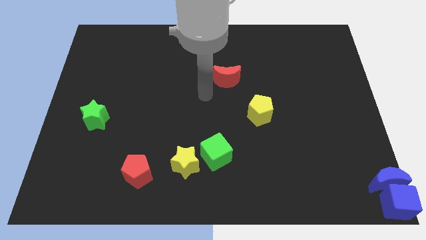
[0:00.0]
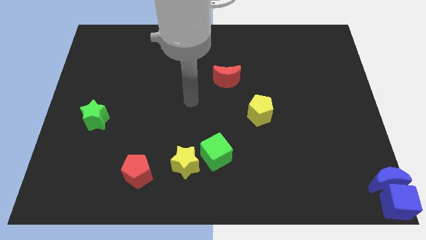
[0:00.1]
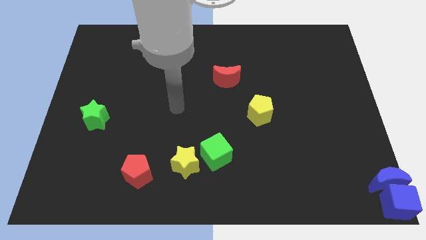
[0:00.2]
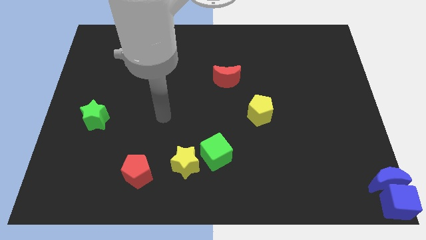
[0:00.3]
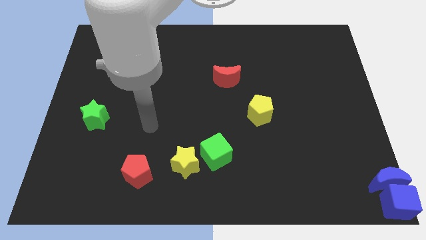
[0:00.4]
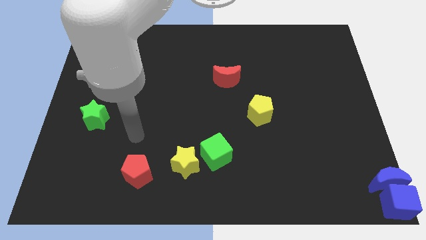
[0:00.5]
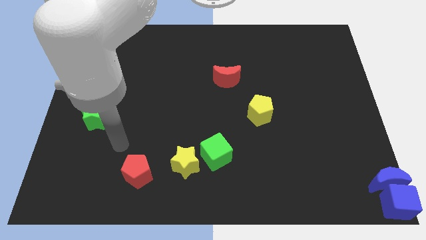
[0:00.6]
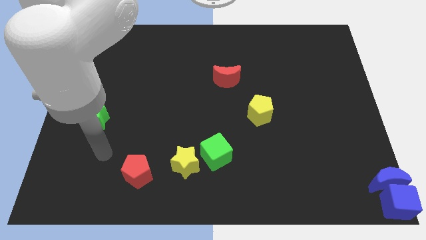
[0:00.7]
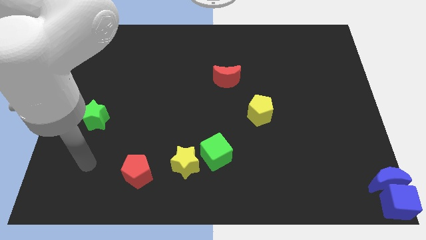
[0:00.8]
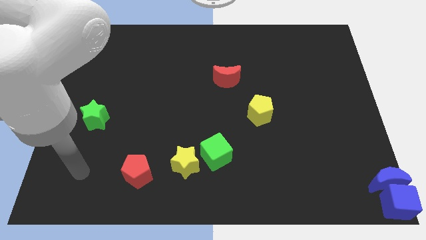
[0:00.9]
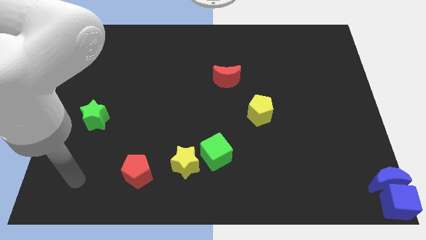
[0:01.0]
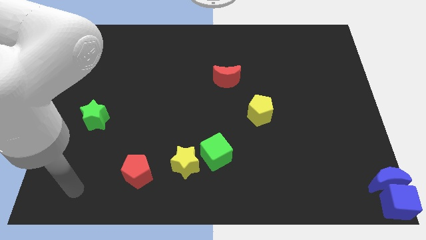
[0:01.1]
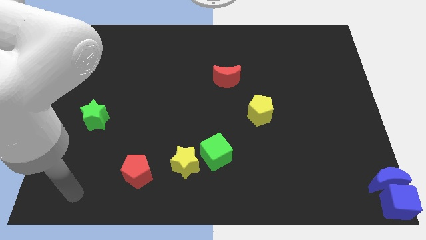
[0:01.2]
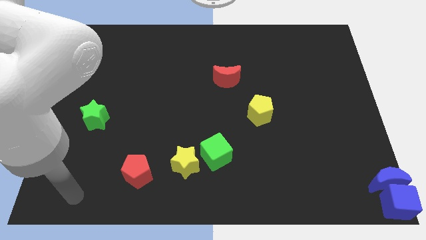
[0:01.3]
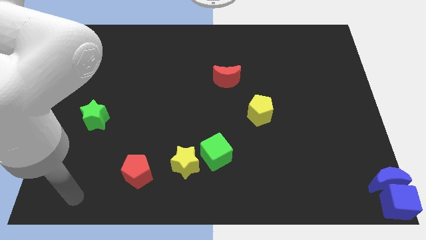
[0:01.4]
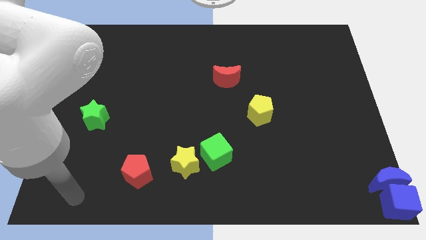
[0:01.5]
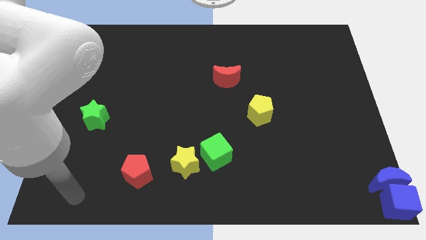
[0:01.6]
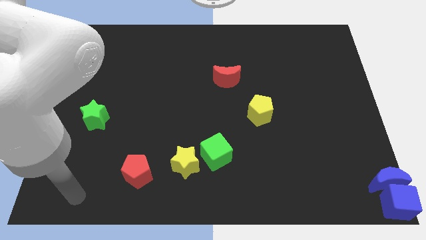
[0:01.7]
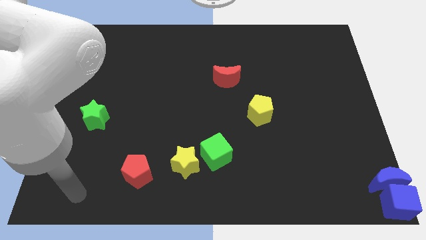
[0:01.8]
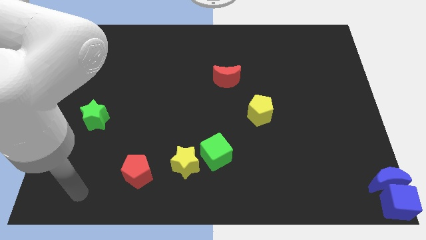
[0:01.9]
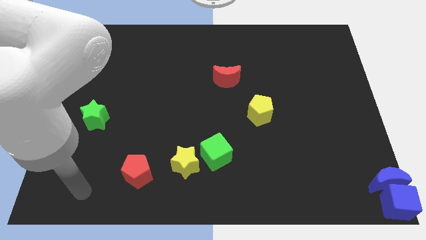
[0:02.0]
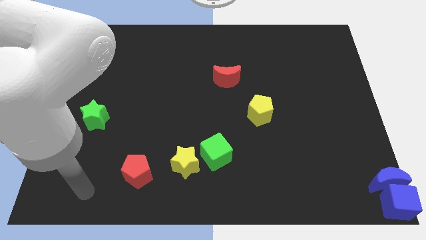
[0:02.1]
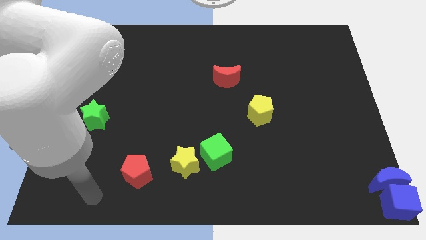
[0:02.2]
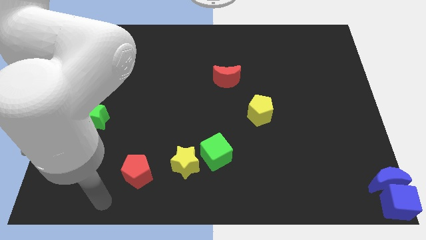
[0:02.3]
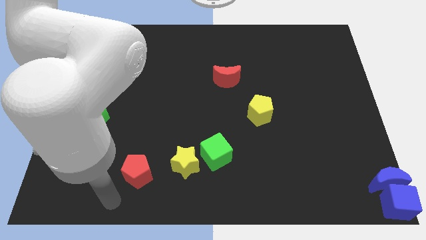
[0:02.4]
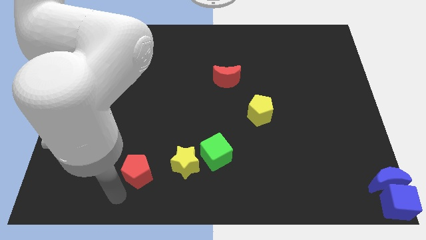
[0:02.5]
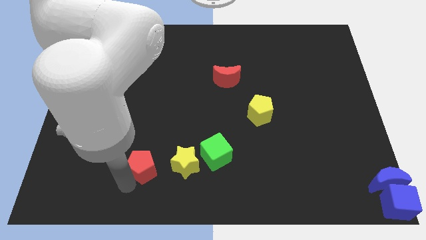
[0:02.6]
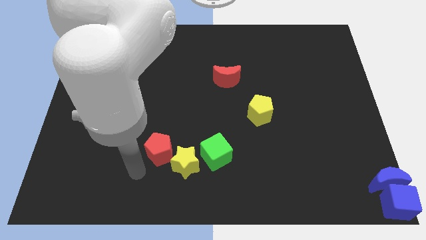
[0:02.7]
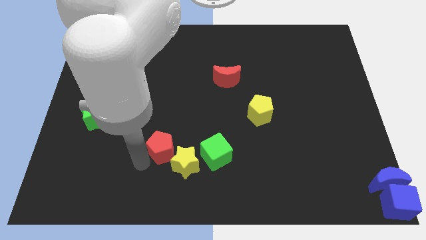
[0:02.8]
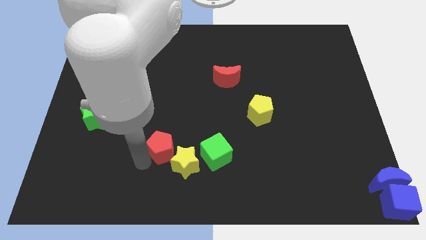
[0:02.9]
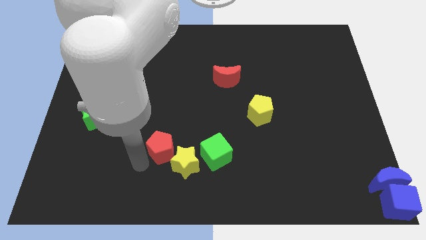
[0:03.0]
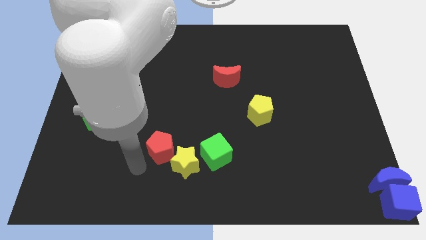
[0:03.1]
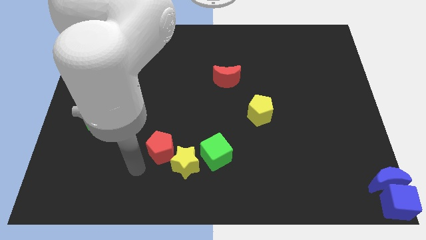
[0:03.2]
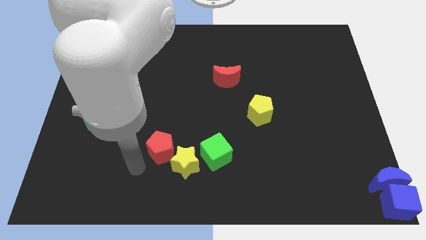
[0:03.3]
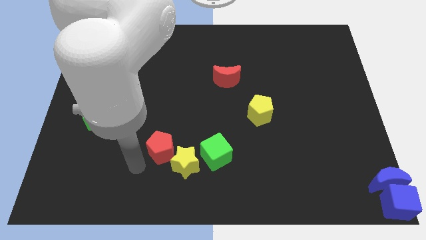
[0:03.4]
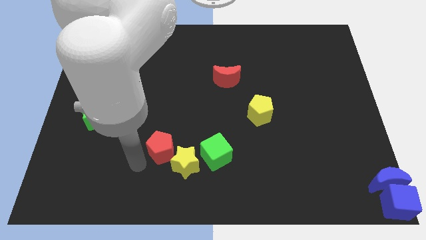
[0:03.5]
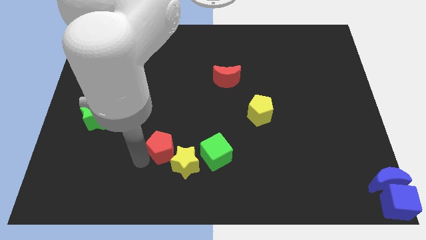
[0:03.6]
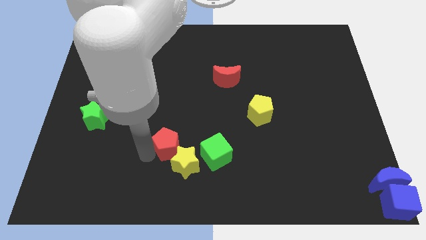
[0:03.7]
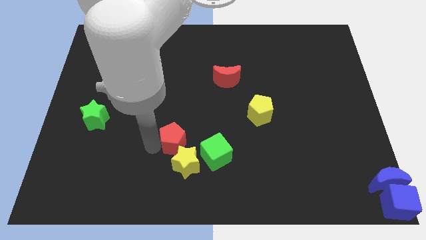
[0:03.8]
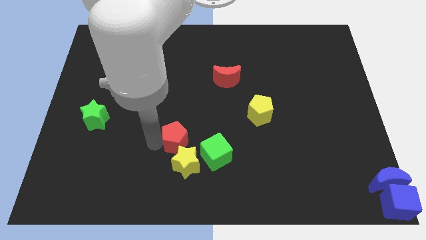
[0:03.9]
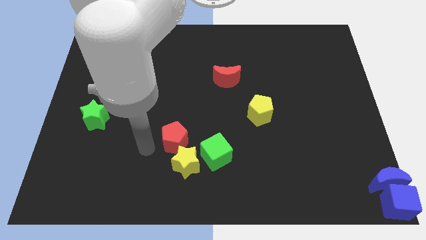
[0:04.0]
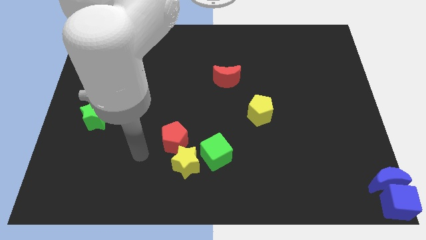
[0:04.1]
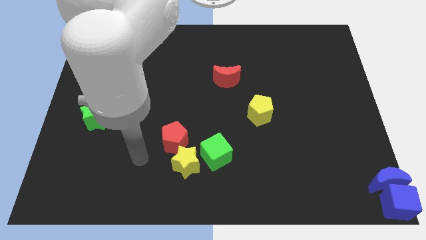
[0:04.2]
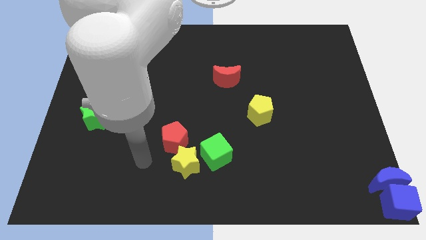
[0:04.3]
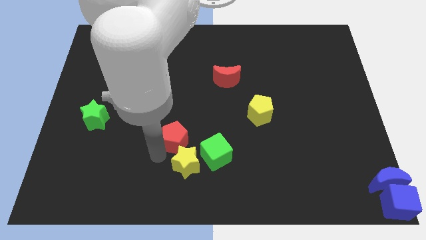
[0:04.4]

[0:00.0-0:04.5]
place the red pentagon above the yellow star

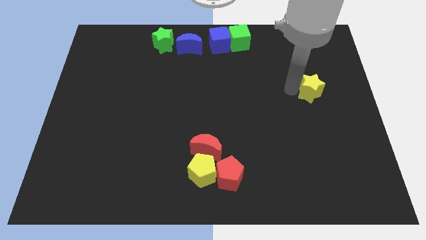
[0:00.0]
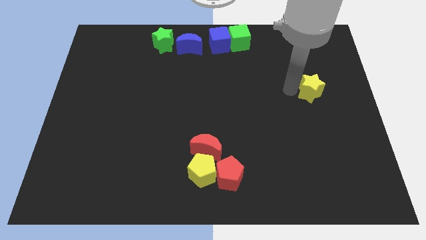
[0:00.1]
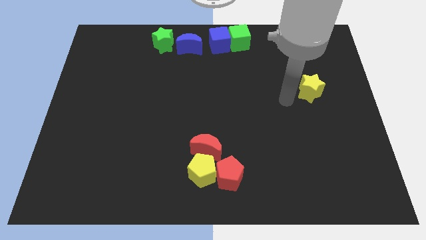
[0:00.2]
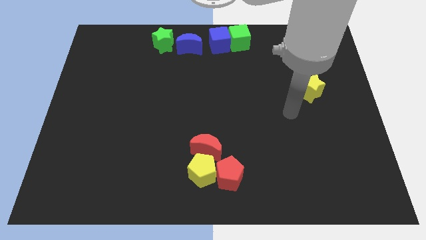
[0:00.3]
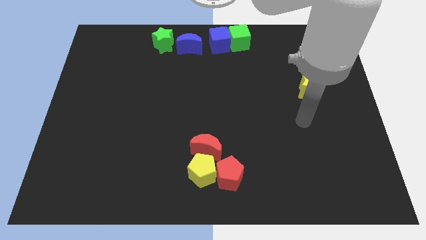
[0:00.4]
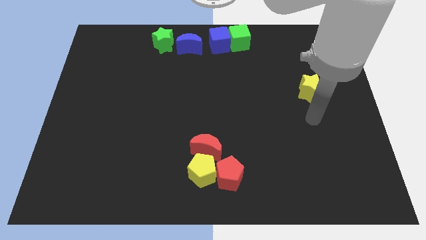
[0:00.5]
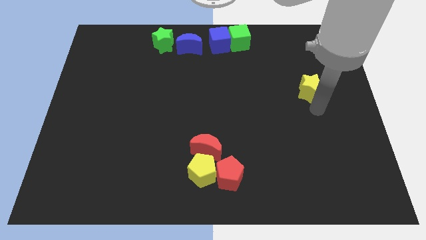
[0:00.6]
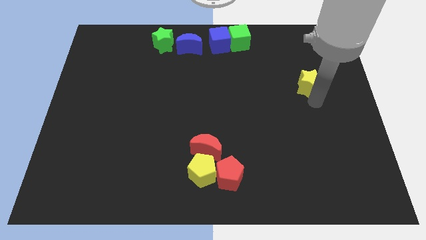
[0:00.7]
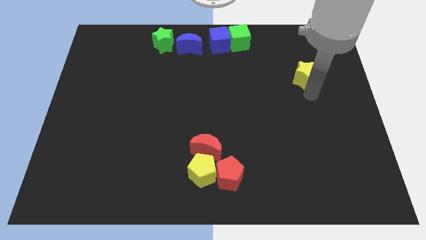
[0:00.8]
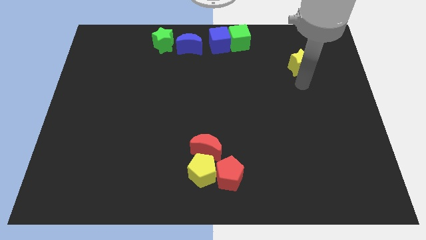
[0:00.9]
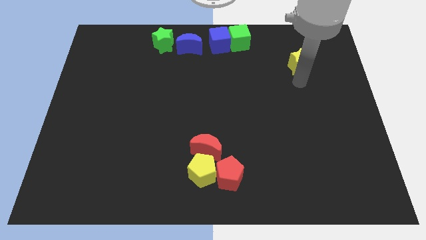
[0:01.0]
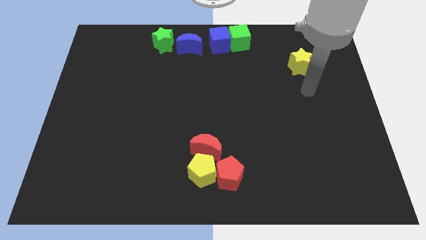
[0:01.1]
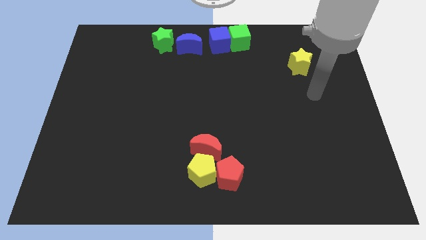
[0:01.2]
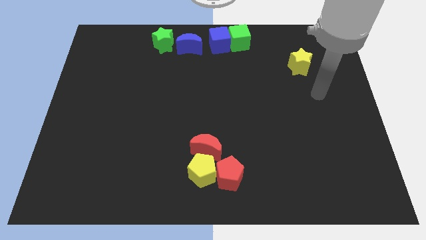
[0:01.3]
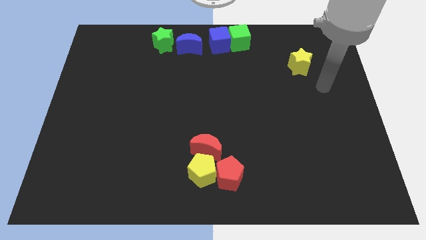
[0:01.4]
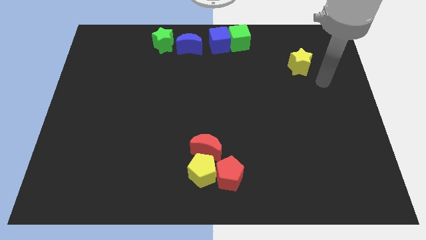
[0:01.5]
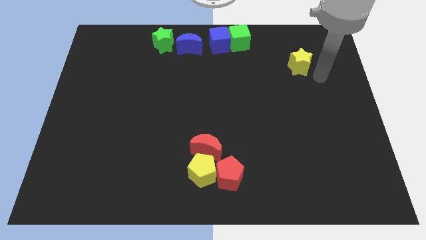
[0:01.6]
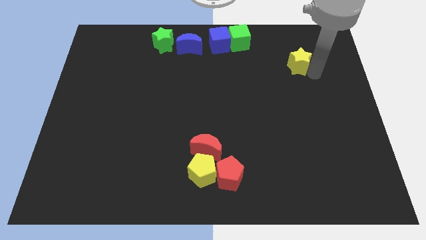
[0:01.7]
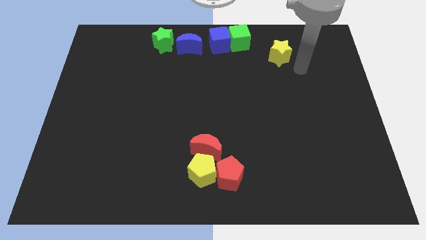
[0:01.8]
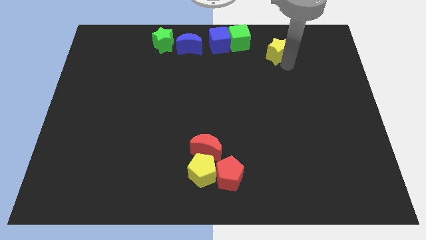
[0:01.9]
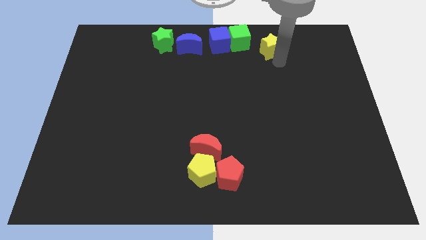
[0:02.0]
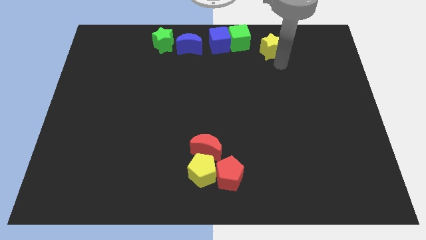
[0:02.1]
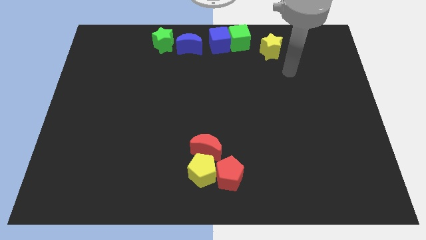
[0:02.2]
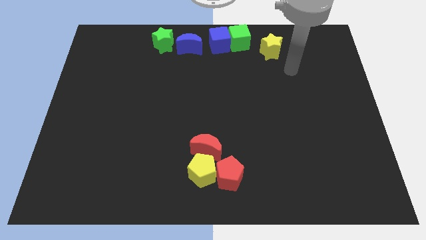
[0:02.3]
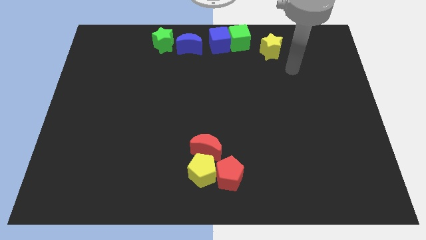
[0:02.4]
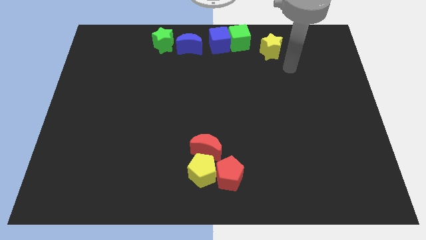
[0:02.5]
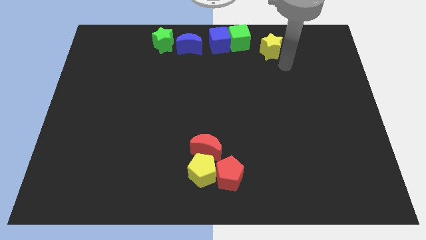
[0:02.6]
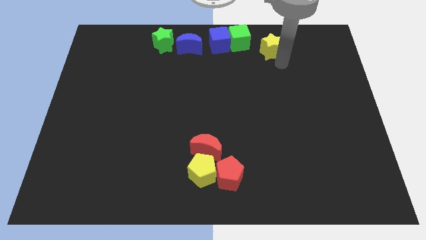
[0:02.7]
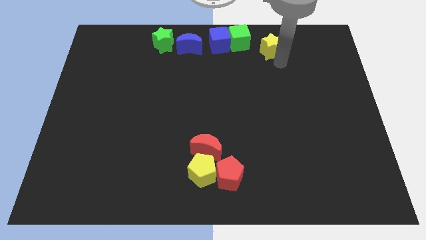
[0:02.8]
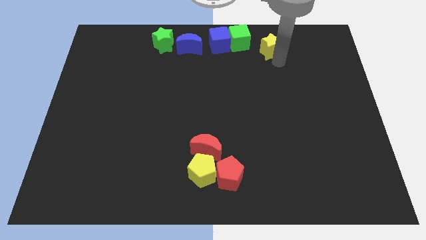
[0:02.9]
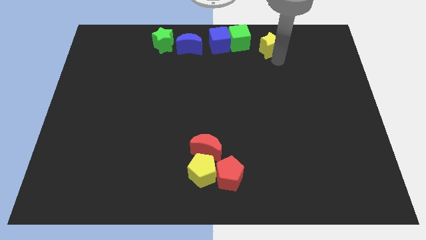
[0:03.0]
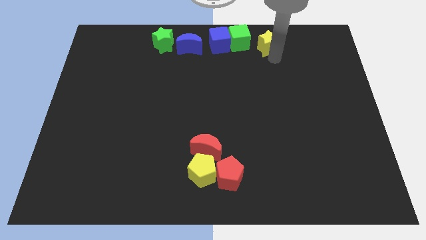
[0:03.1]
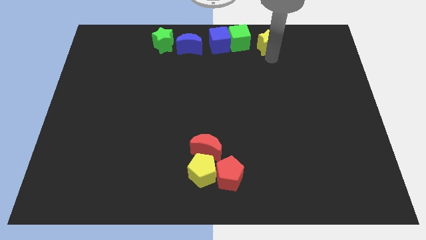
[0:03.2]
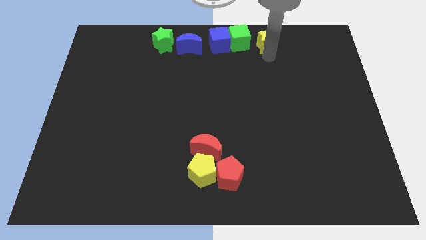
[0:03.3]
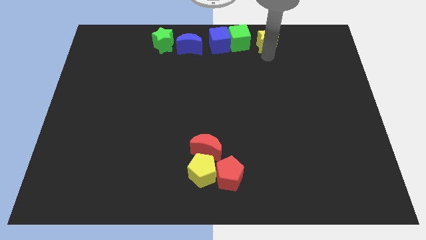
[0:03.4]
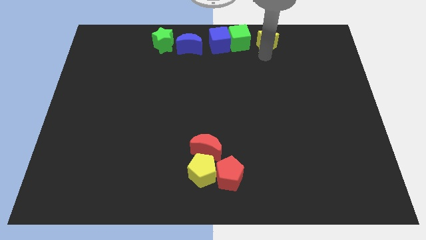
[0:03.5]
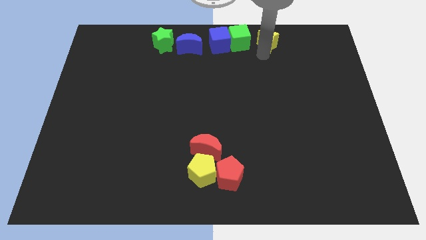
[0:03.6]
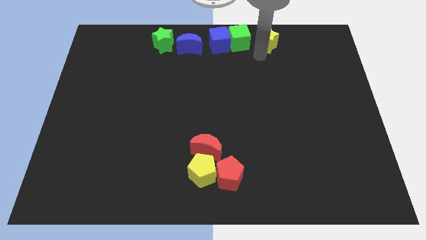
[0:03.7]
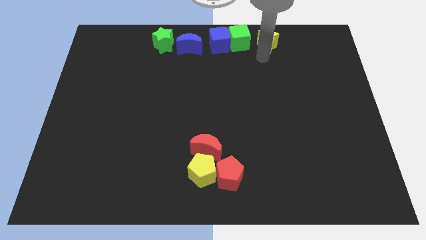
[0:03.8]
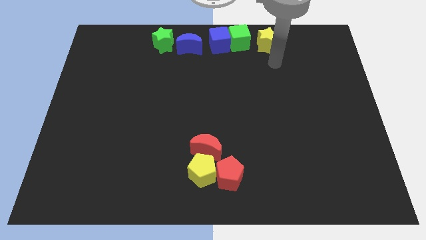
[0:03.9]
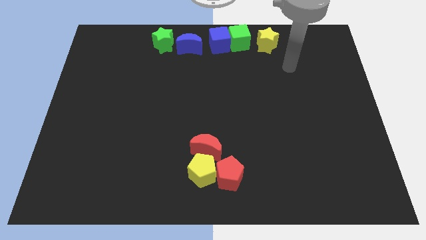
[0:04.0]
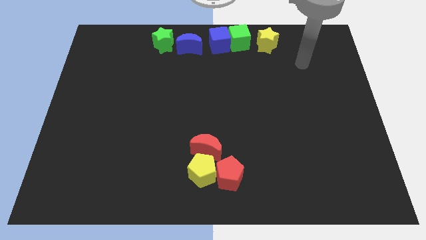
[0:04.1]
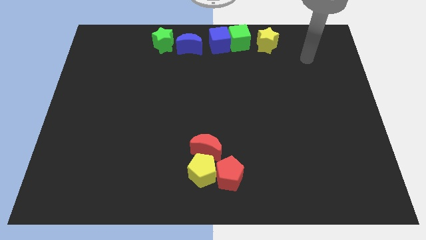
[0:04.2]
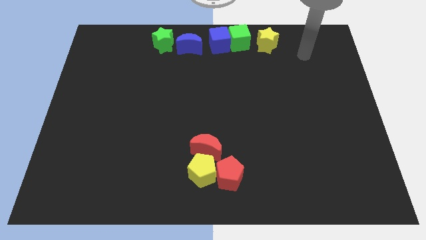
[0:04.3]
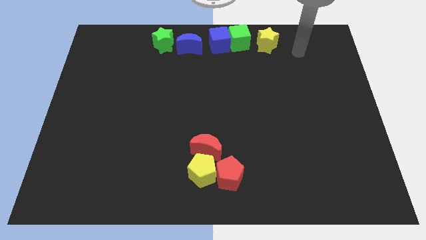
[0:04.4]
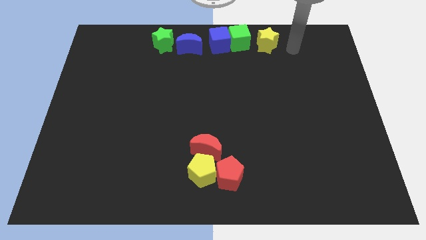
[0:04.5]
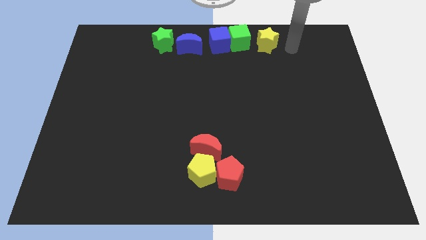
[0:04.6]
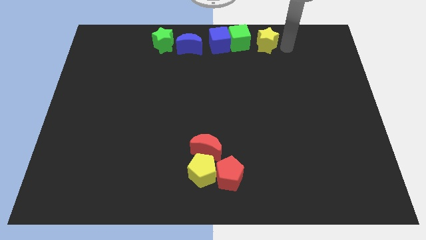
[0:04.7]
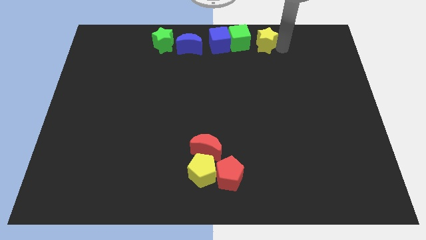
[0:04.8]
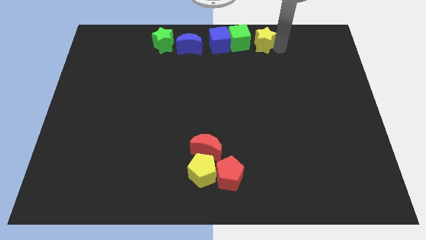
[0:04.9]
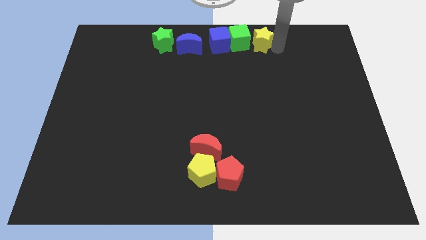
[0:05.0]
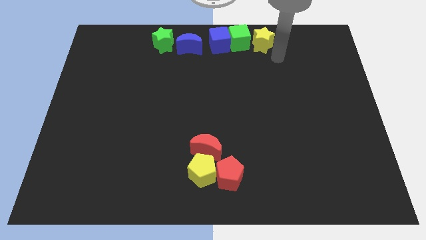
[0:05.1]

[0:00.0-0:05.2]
drag the yellow star close to the right side of the green cube
